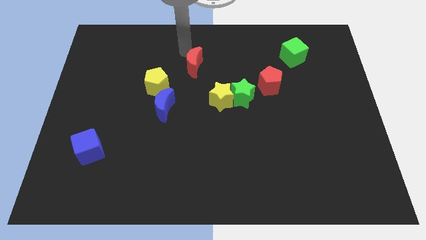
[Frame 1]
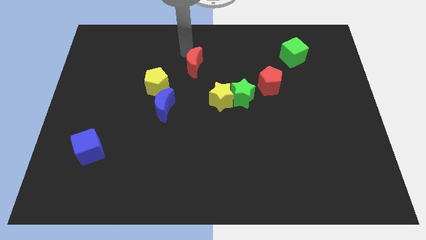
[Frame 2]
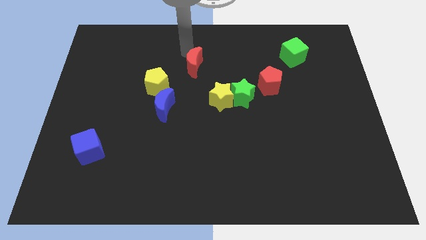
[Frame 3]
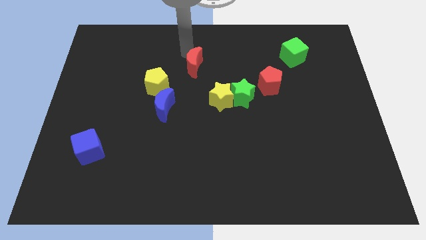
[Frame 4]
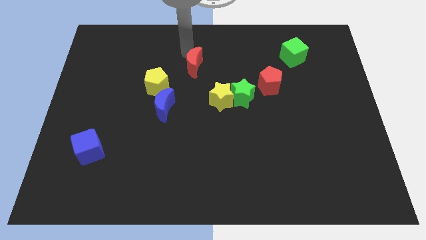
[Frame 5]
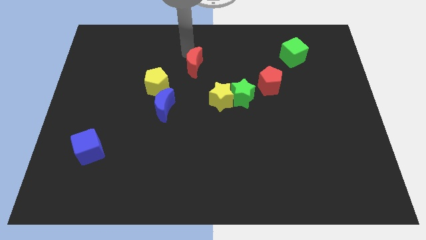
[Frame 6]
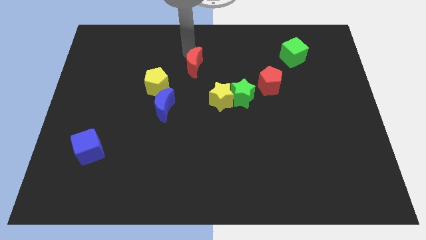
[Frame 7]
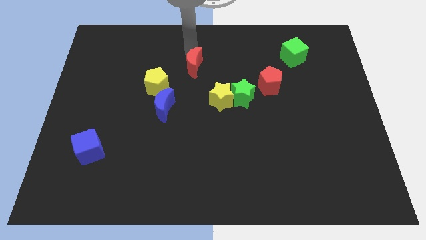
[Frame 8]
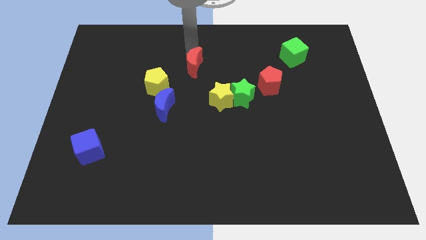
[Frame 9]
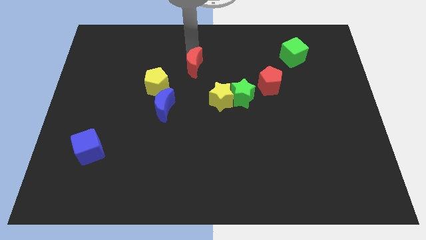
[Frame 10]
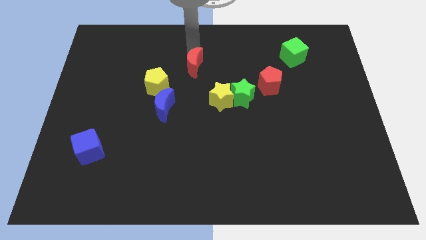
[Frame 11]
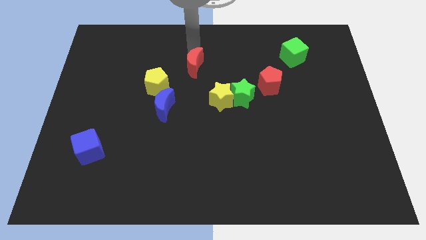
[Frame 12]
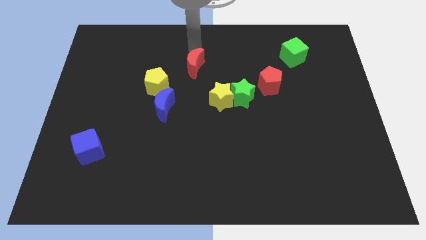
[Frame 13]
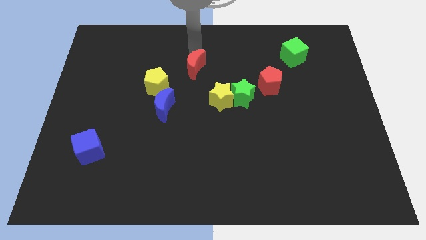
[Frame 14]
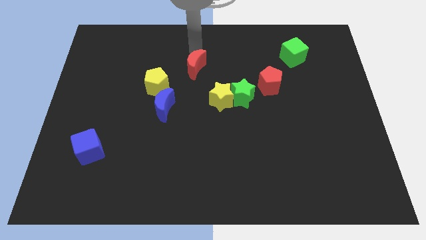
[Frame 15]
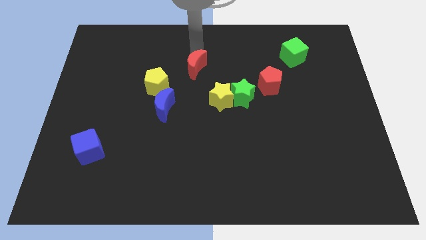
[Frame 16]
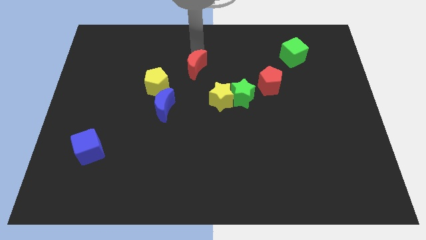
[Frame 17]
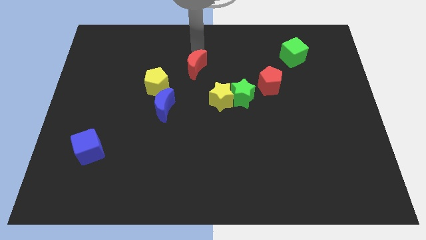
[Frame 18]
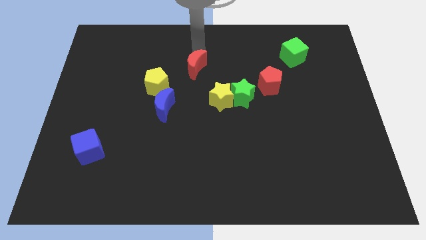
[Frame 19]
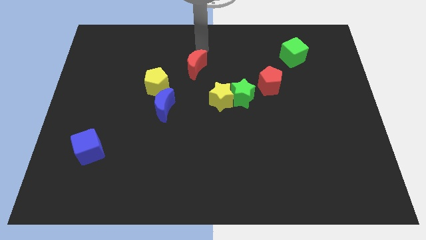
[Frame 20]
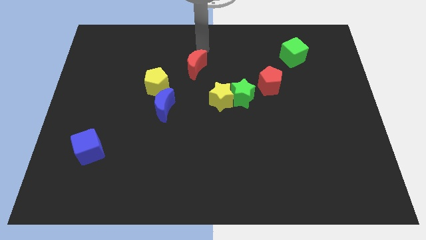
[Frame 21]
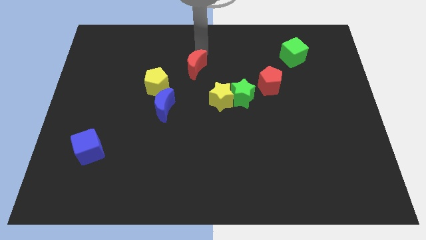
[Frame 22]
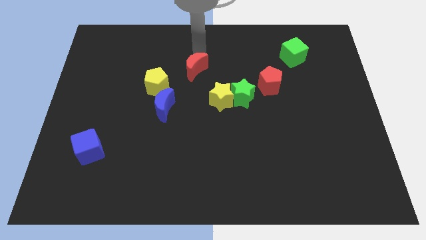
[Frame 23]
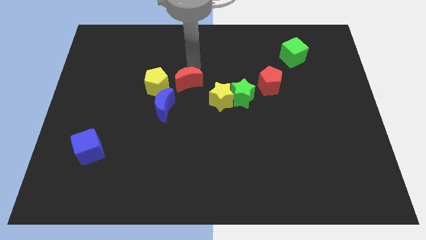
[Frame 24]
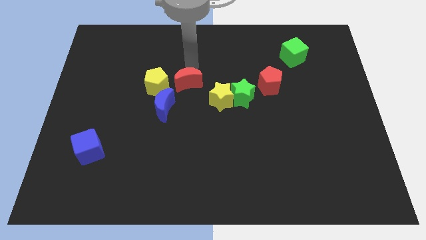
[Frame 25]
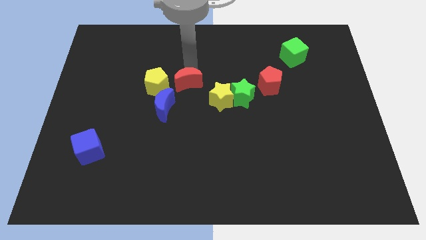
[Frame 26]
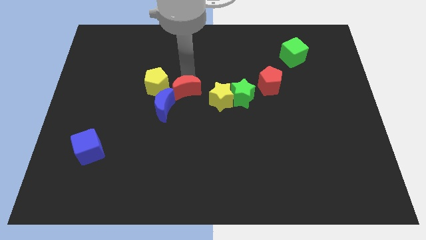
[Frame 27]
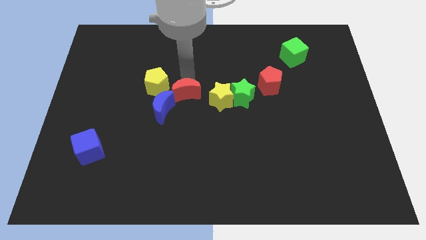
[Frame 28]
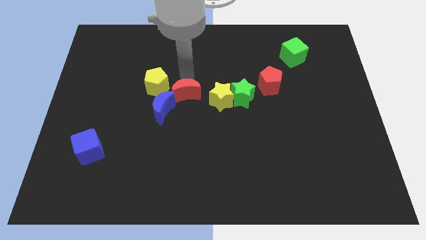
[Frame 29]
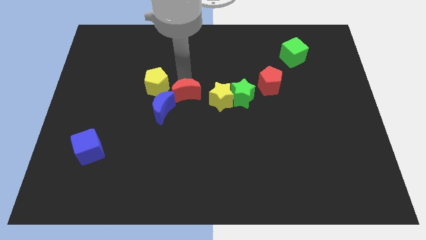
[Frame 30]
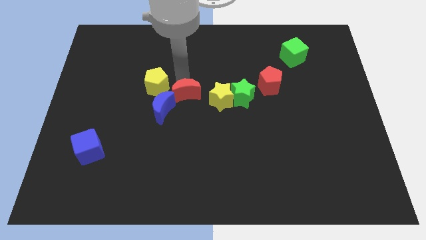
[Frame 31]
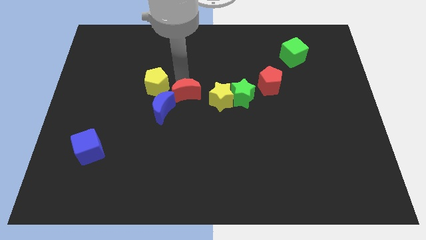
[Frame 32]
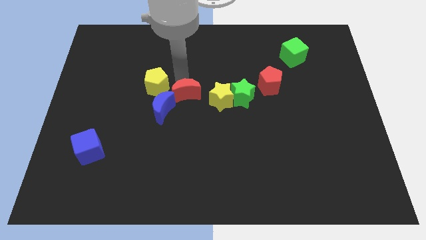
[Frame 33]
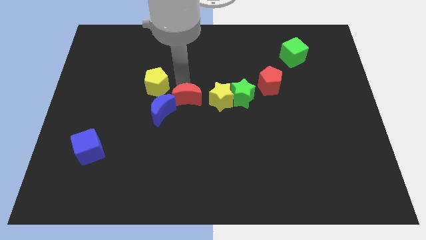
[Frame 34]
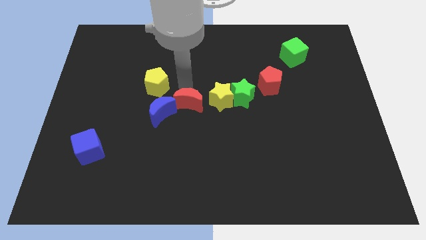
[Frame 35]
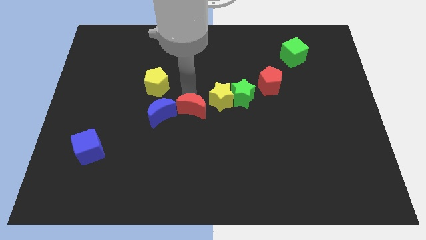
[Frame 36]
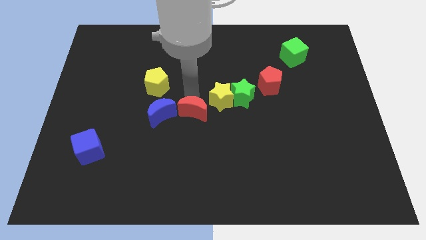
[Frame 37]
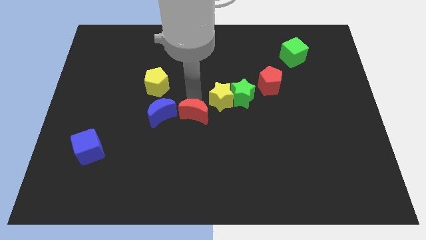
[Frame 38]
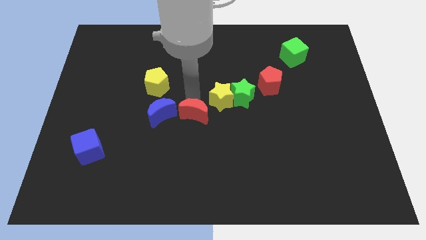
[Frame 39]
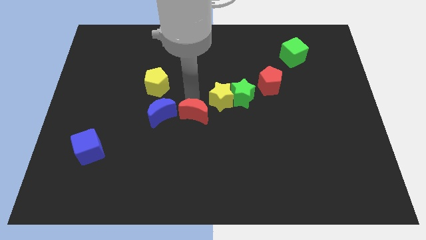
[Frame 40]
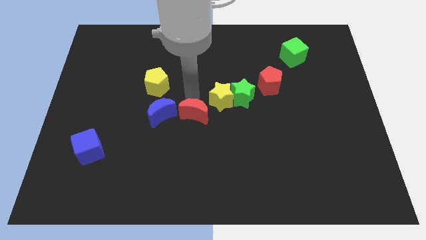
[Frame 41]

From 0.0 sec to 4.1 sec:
put the group of crescents to the bottom

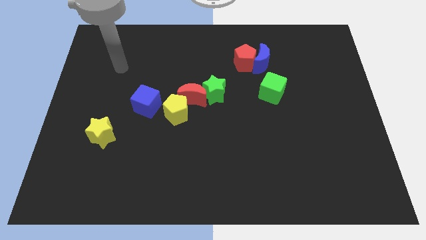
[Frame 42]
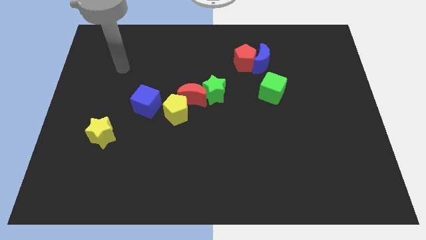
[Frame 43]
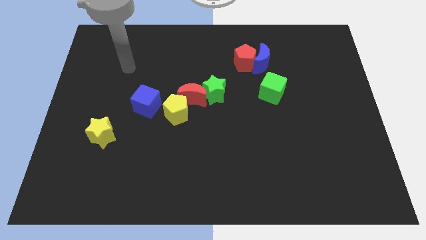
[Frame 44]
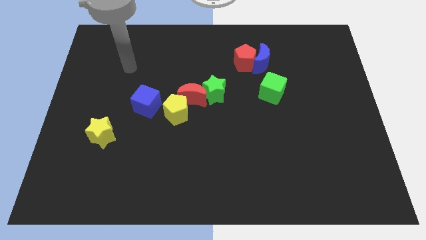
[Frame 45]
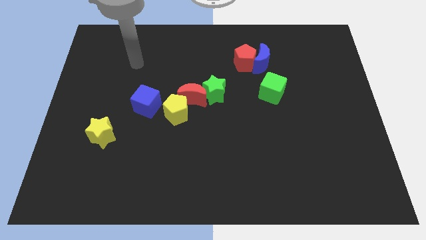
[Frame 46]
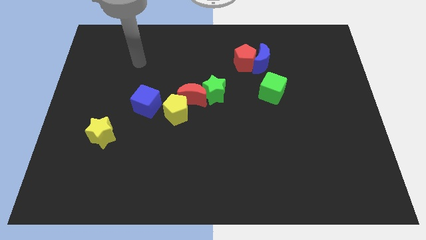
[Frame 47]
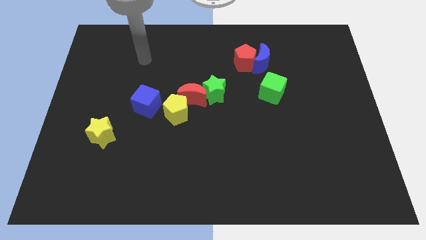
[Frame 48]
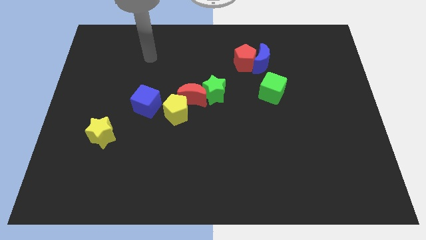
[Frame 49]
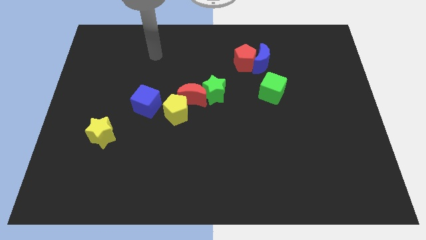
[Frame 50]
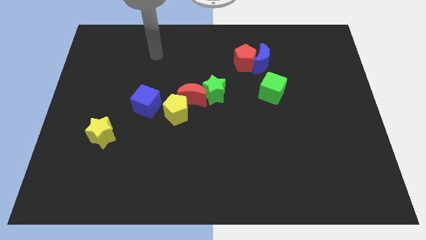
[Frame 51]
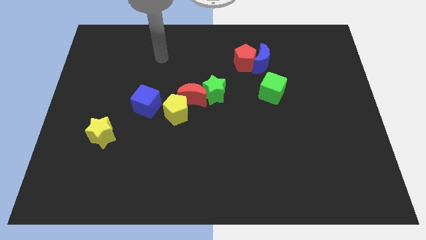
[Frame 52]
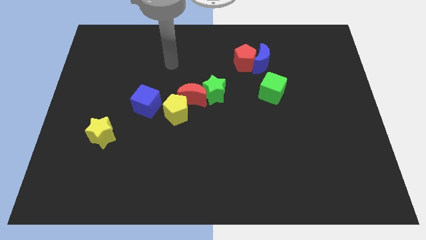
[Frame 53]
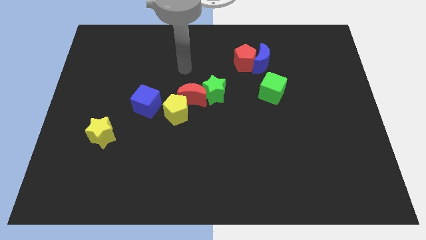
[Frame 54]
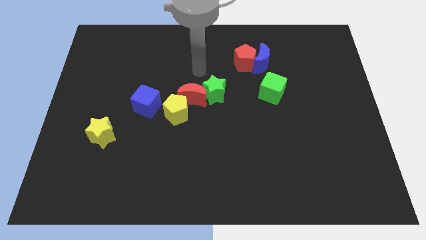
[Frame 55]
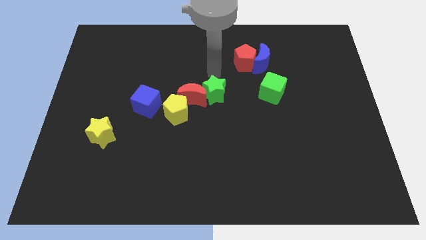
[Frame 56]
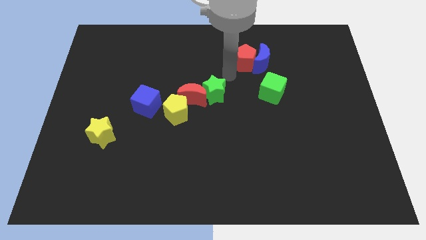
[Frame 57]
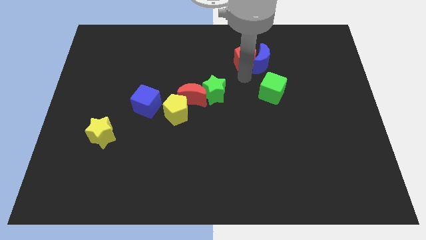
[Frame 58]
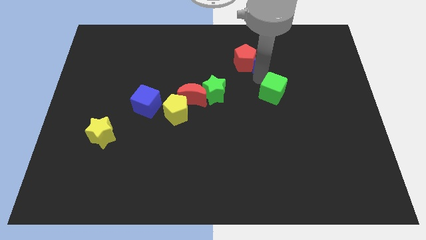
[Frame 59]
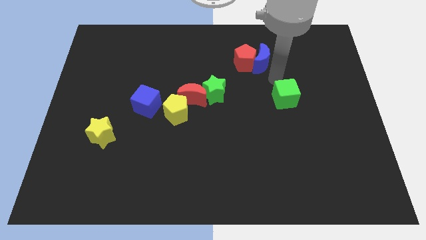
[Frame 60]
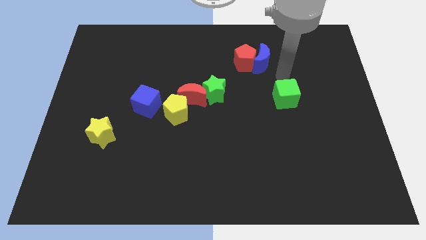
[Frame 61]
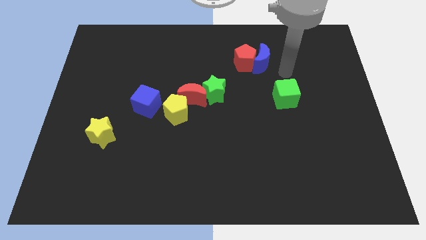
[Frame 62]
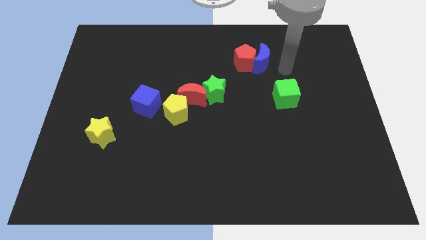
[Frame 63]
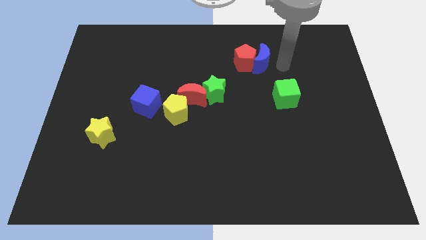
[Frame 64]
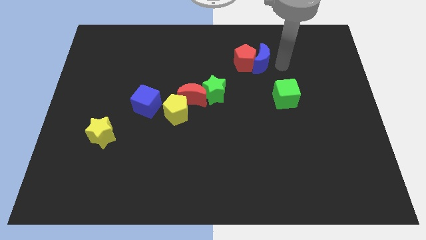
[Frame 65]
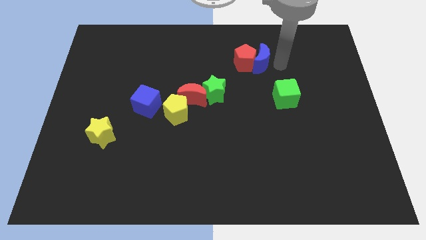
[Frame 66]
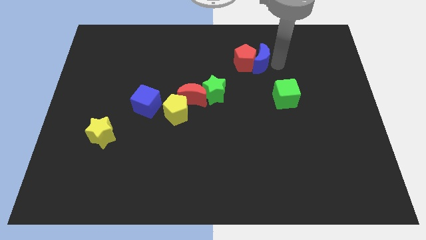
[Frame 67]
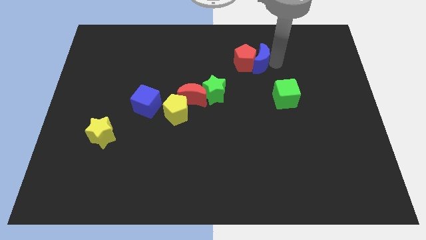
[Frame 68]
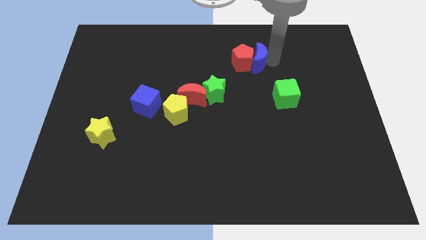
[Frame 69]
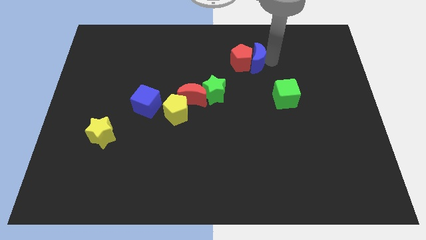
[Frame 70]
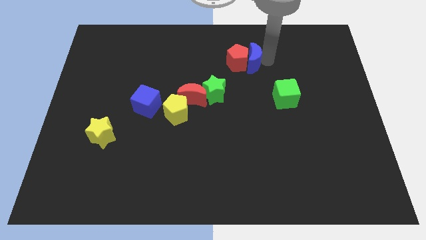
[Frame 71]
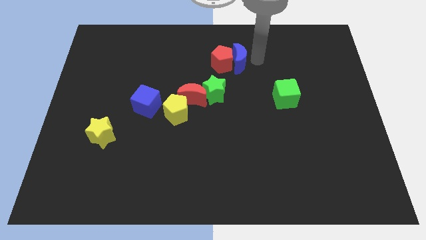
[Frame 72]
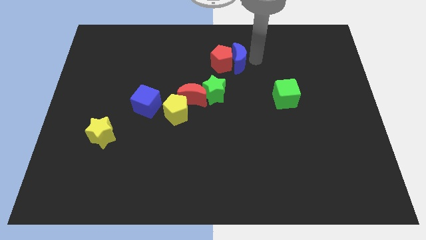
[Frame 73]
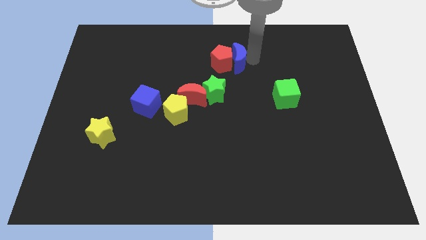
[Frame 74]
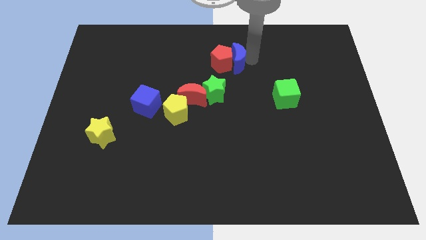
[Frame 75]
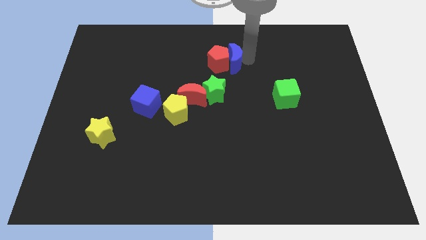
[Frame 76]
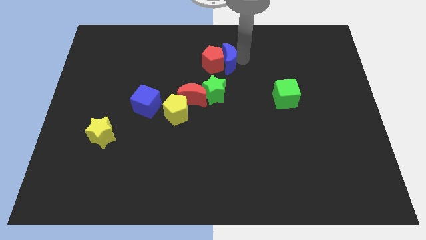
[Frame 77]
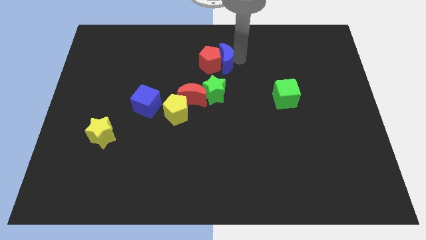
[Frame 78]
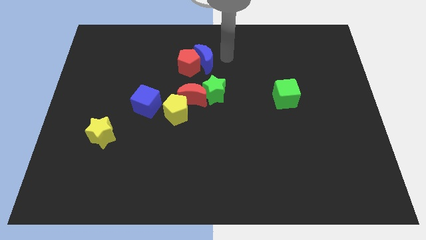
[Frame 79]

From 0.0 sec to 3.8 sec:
push the green cube and blue crescent red pentagon to the left side

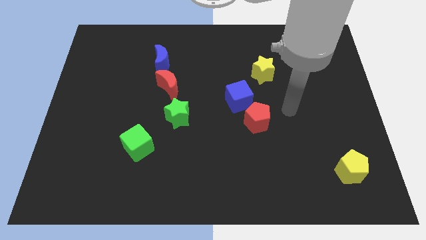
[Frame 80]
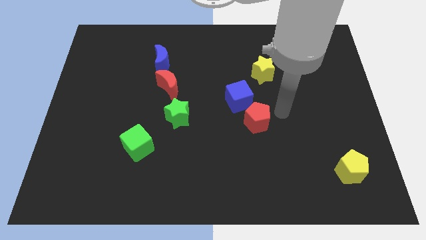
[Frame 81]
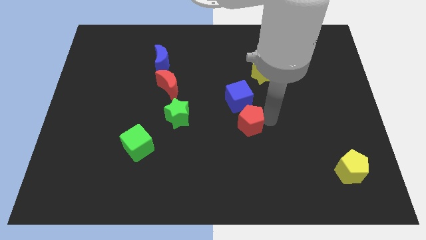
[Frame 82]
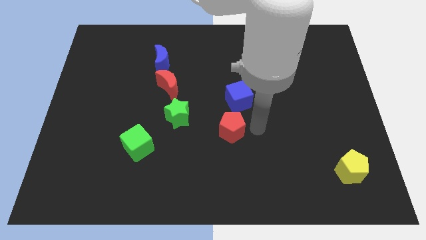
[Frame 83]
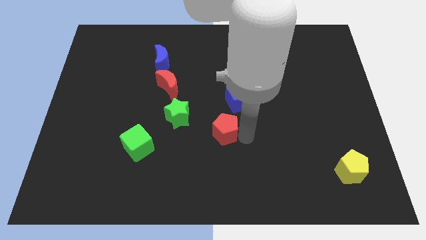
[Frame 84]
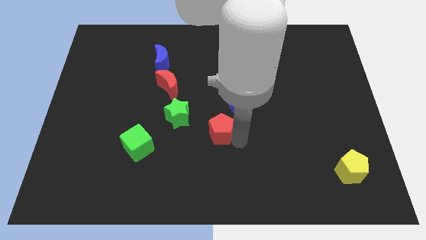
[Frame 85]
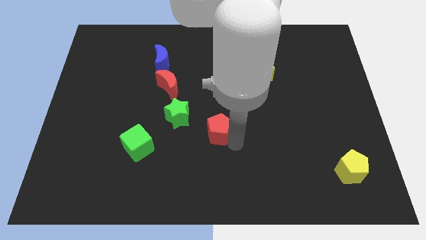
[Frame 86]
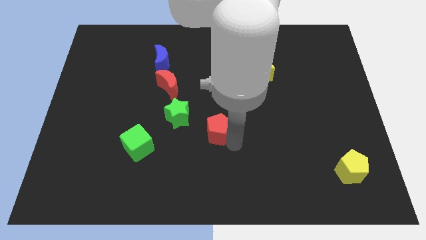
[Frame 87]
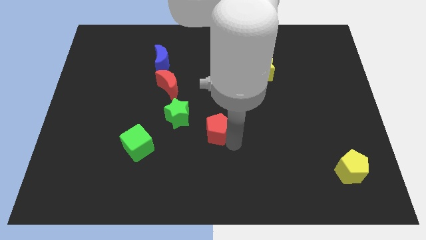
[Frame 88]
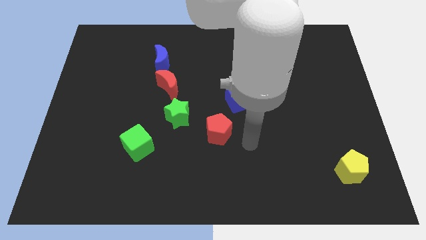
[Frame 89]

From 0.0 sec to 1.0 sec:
push the red pentagon vertical to the blue cube
